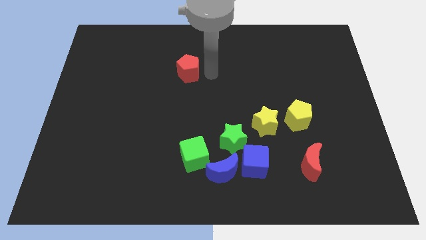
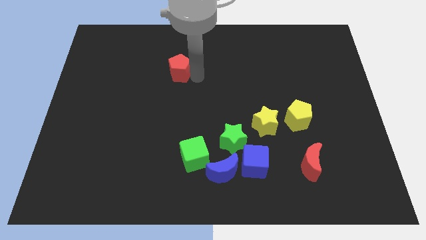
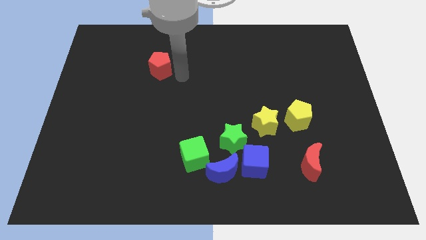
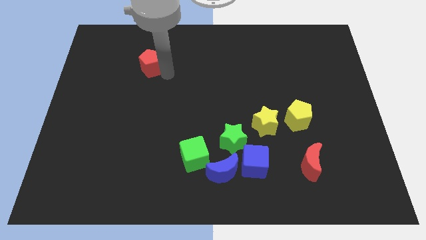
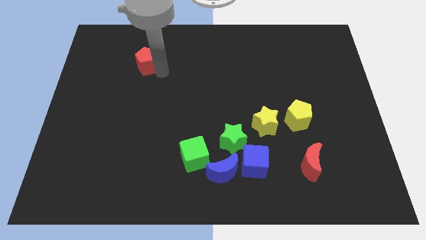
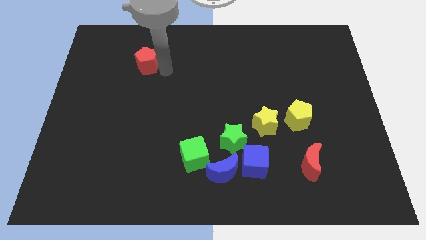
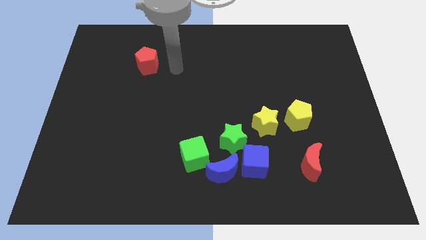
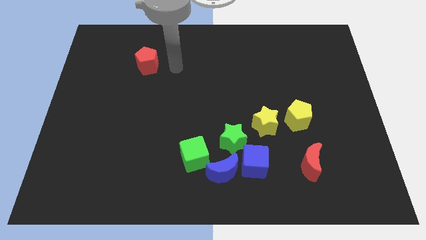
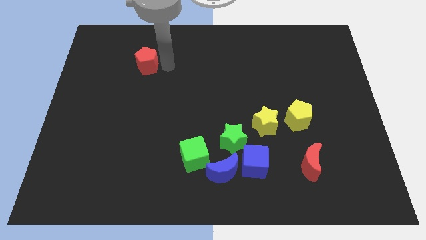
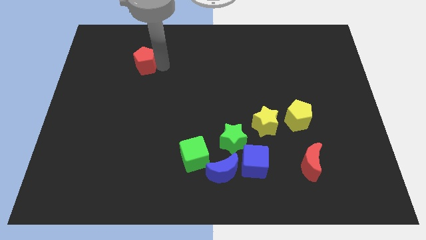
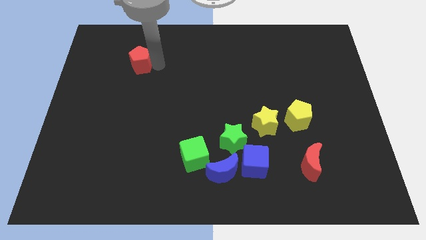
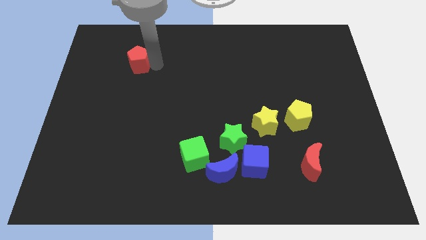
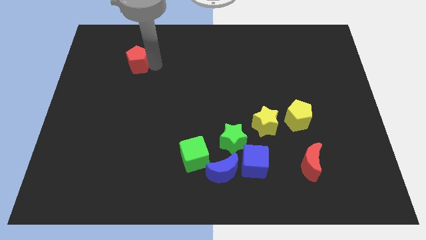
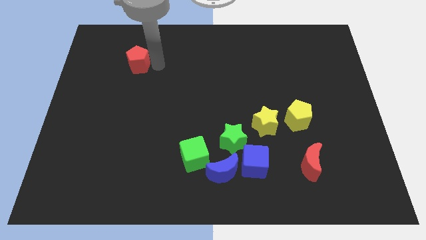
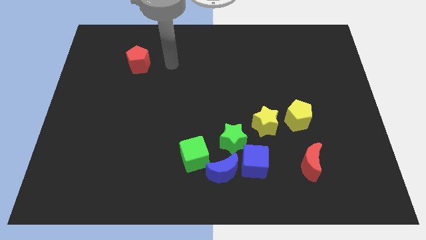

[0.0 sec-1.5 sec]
slightly push red pentagon towards left

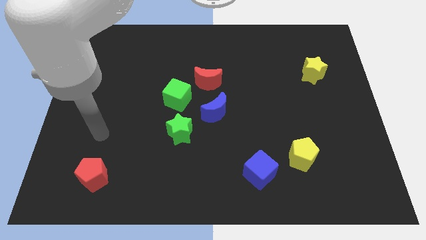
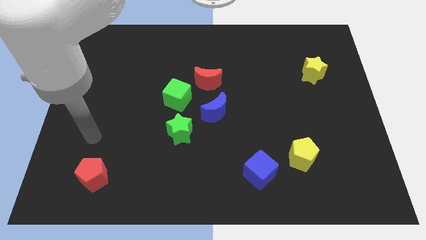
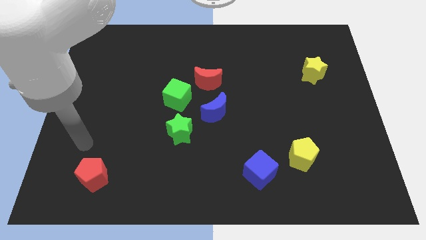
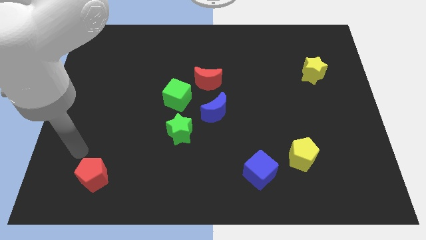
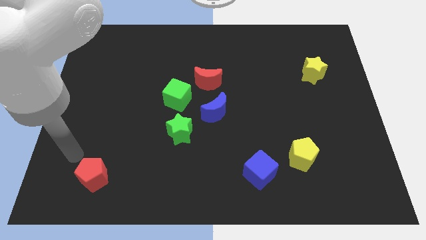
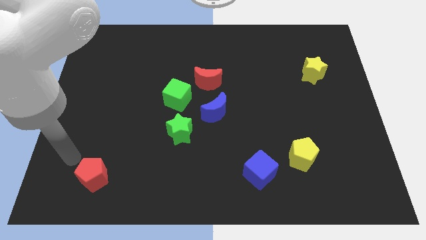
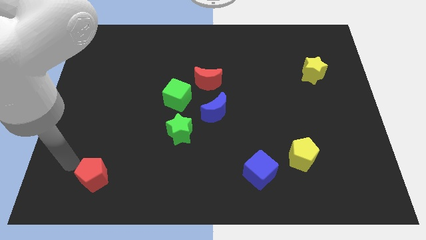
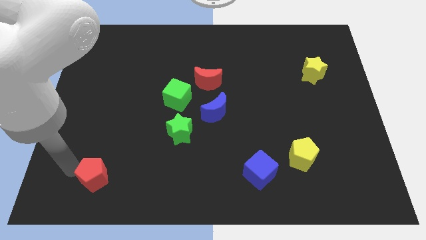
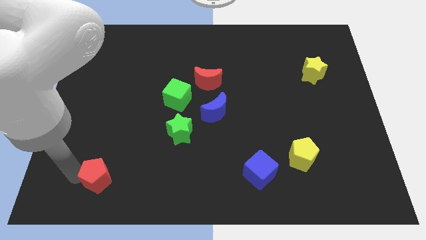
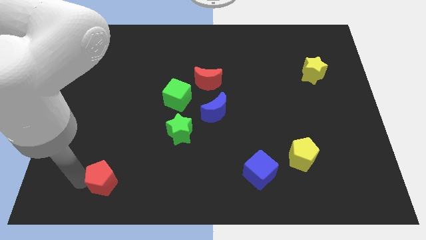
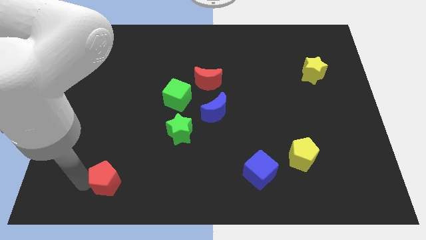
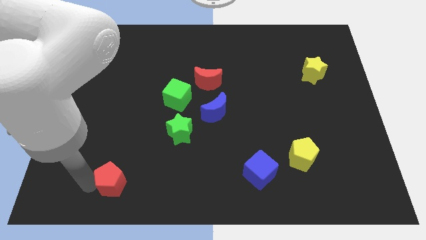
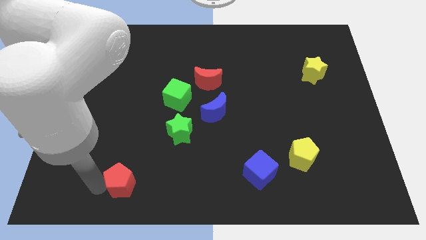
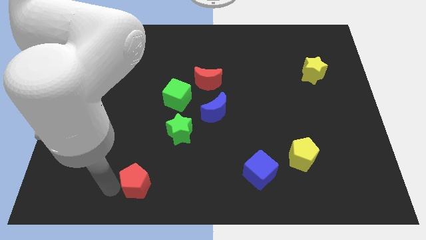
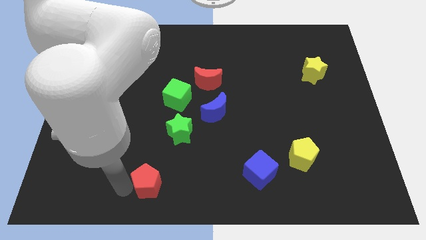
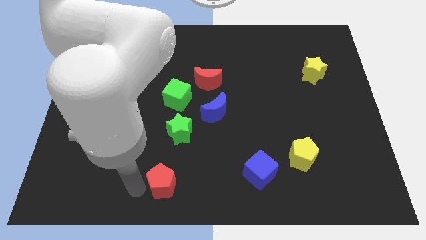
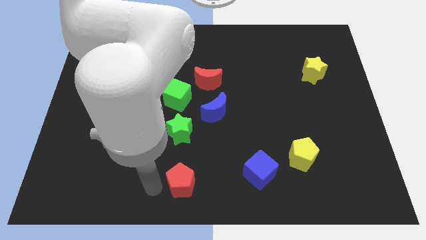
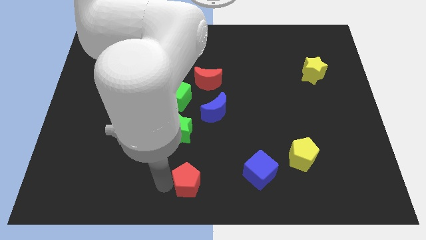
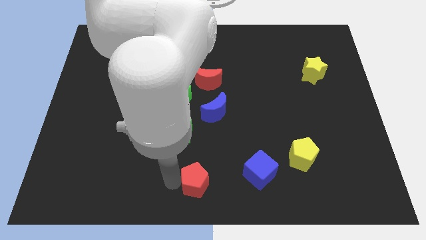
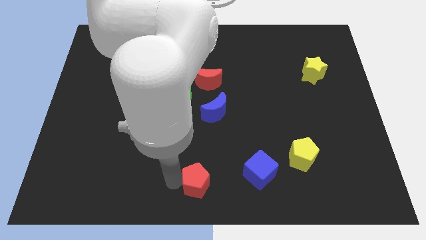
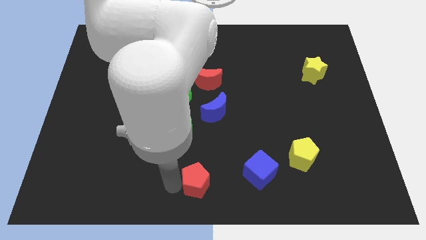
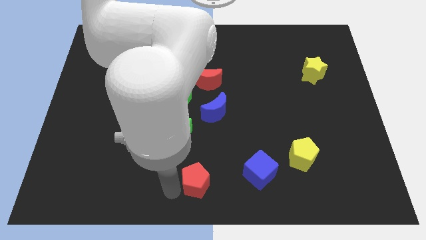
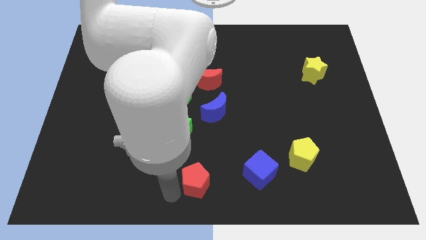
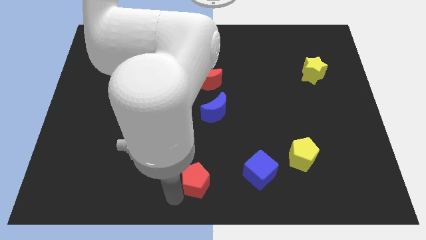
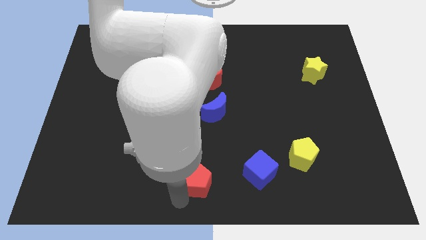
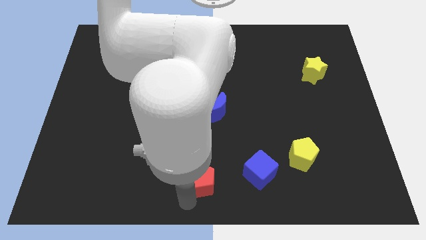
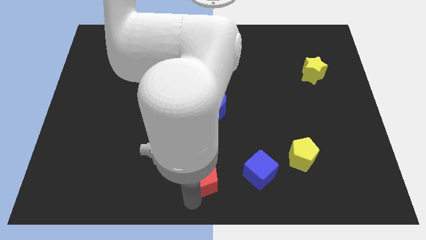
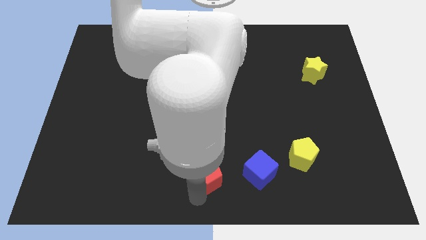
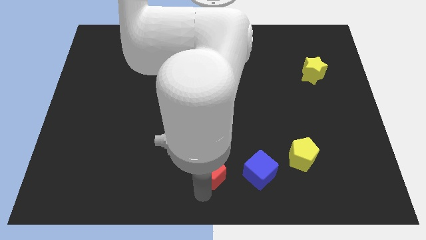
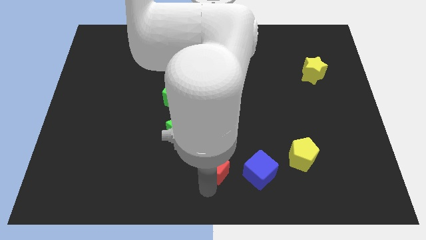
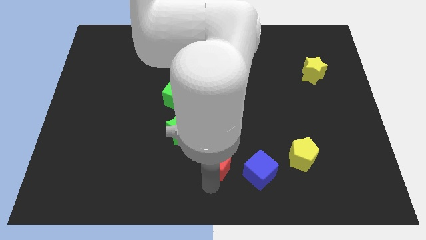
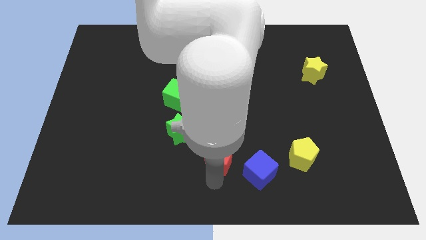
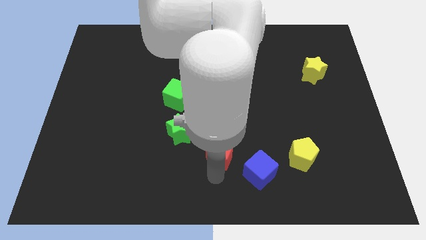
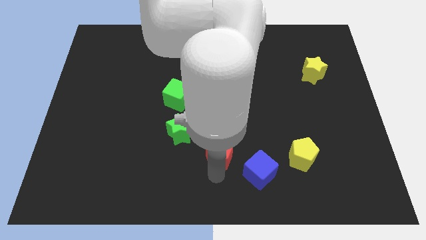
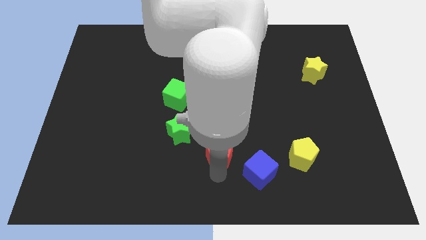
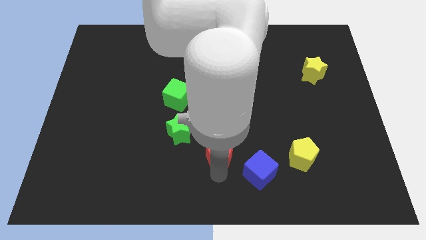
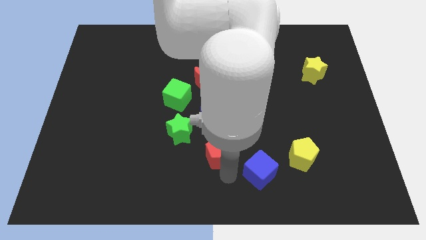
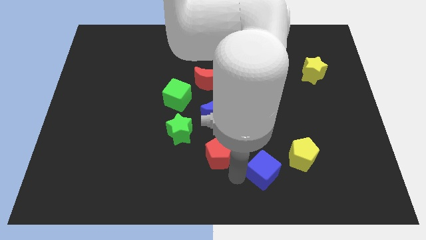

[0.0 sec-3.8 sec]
place the red pentagon diagonal to blue cube

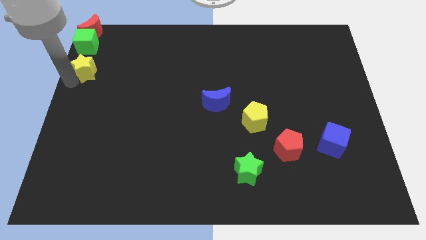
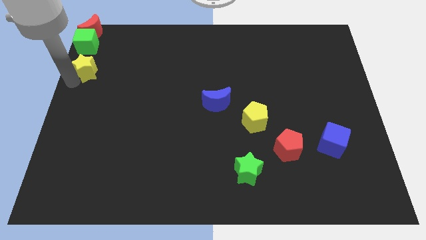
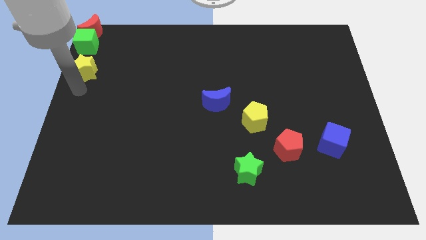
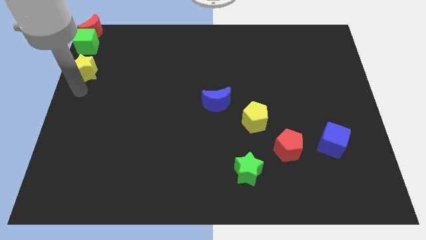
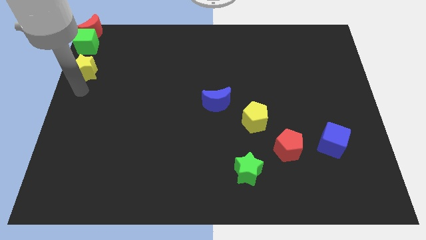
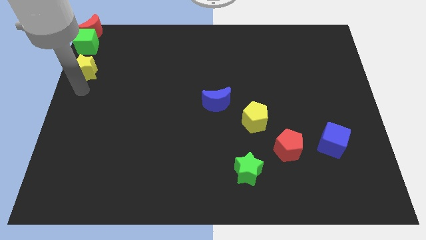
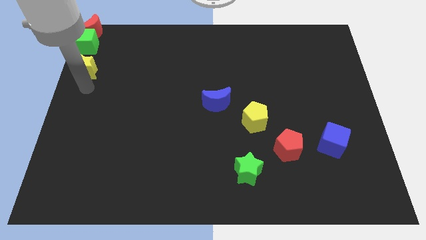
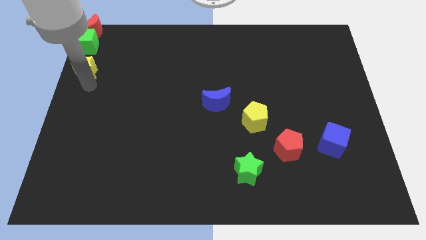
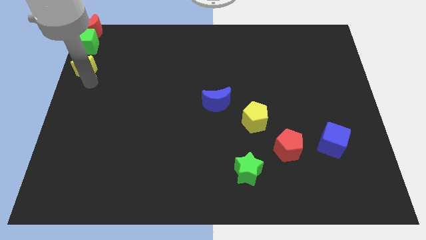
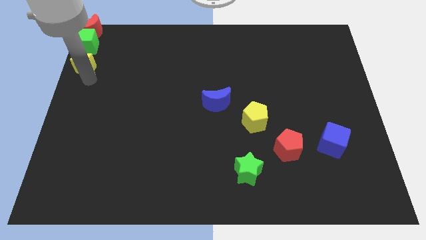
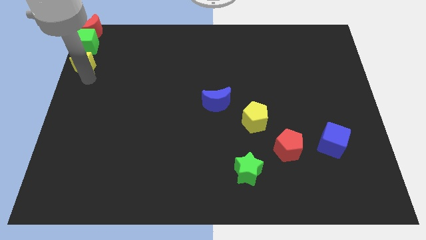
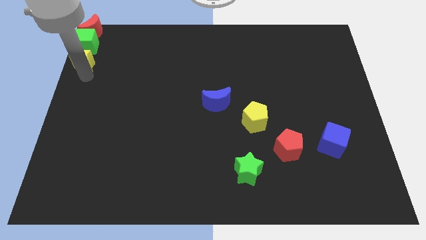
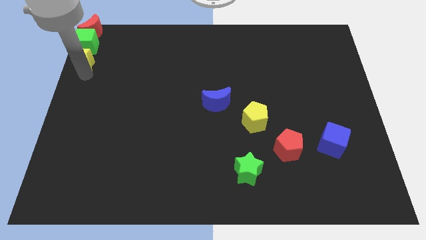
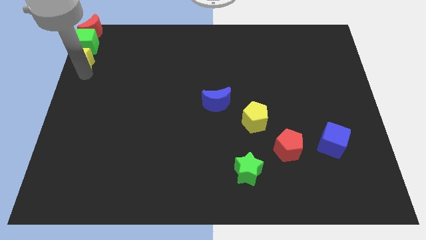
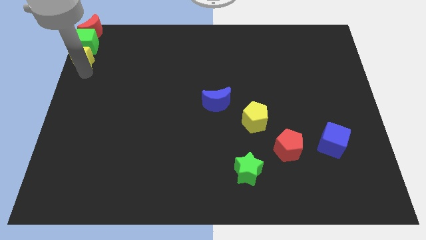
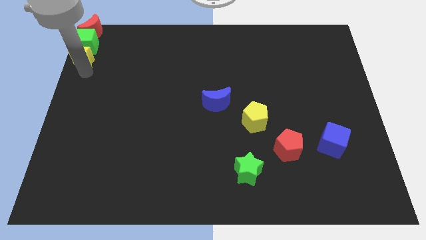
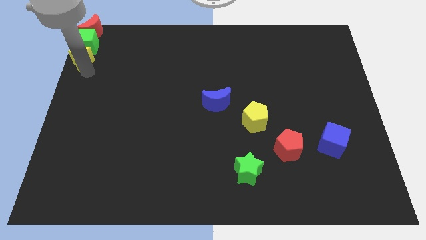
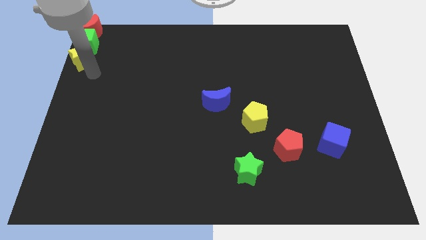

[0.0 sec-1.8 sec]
place the yellow star at the bottom of the green cube

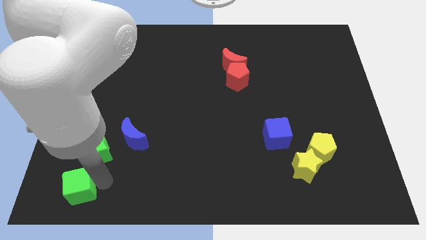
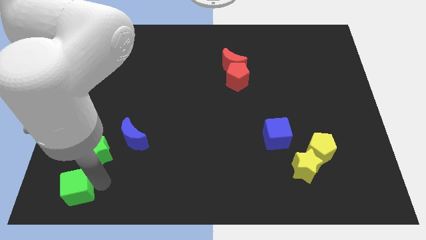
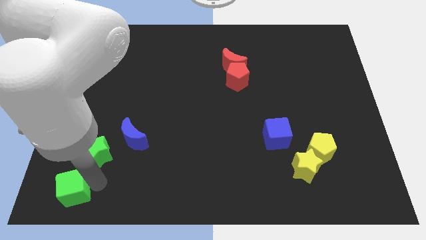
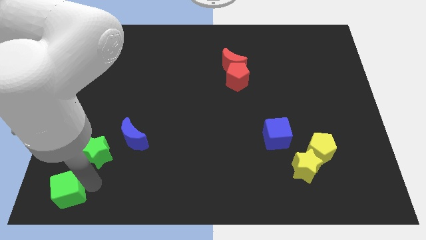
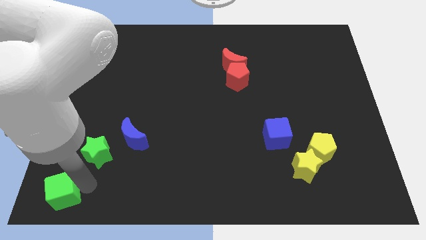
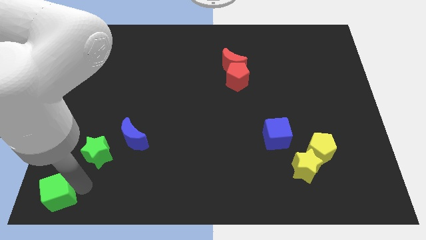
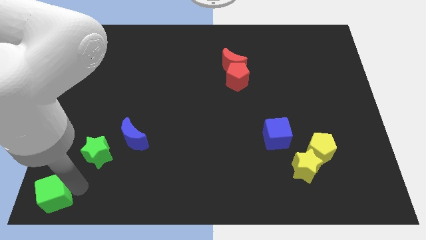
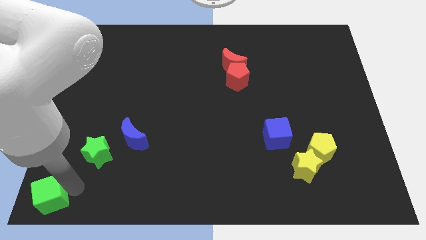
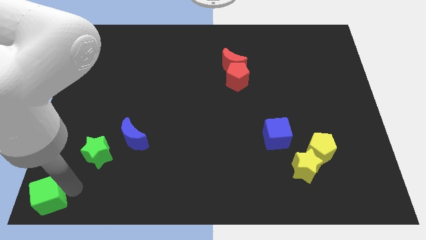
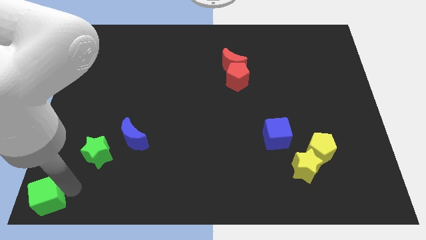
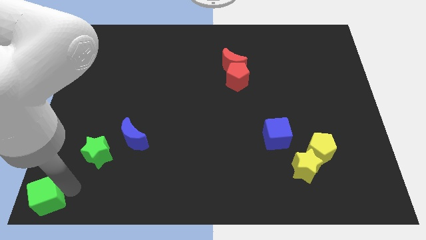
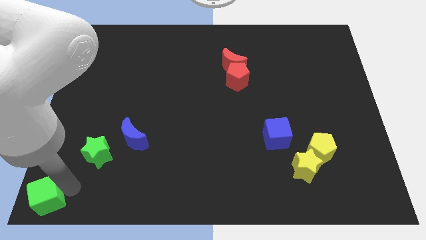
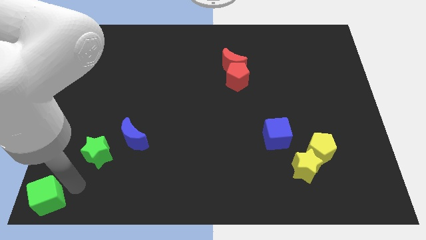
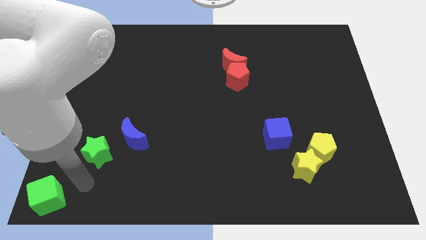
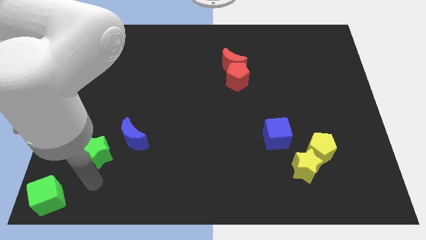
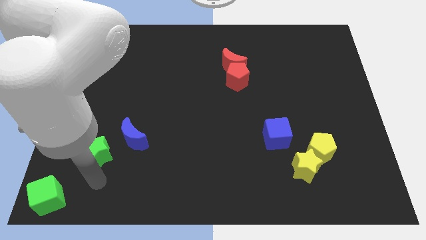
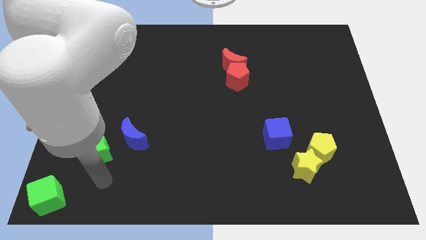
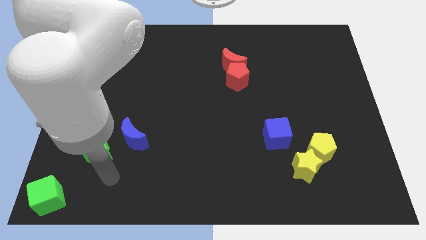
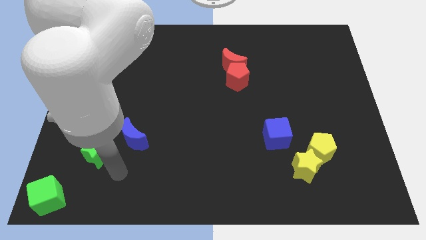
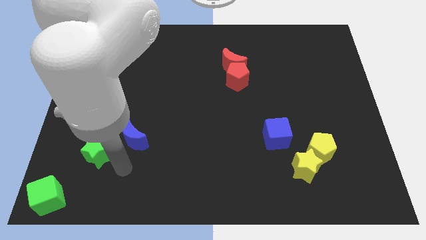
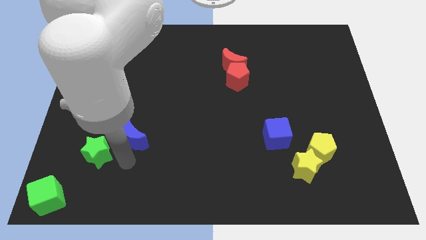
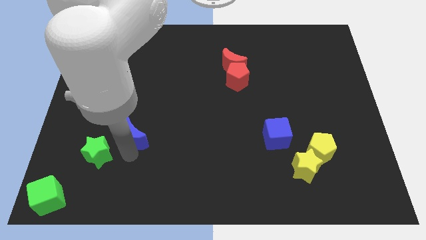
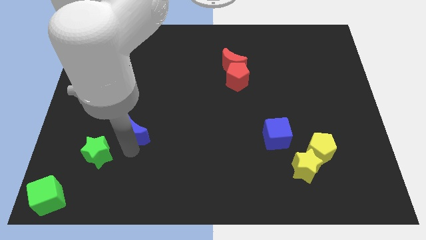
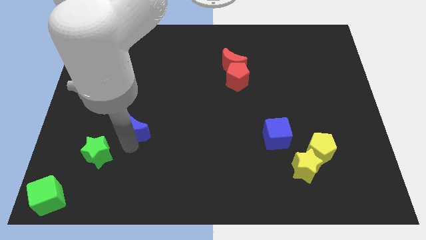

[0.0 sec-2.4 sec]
move the green cube to the bottom left corner of the board
